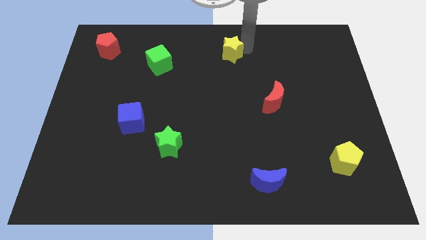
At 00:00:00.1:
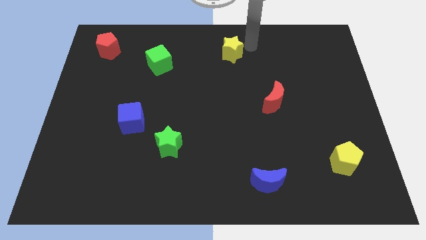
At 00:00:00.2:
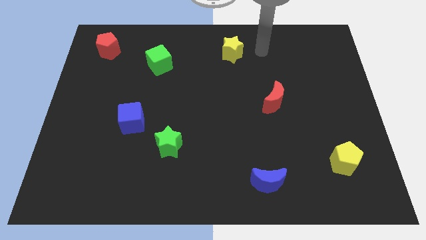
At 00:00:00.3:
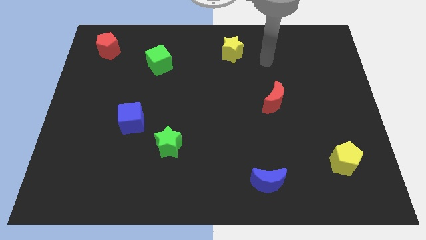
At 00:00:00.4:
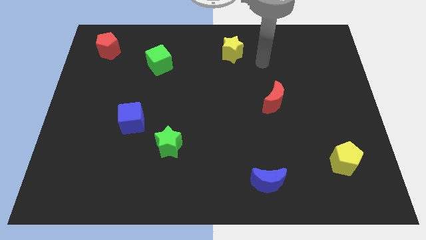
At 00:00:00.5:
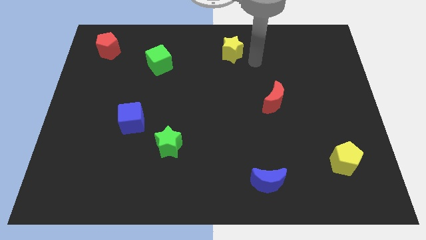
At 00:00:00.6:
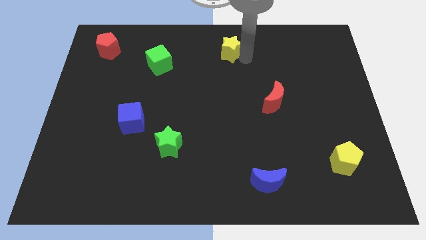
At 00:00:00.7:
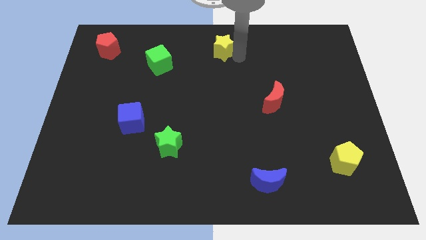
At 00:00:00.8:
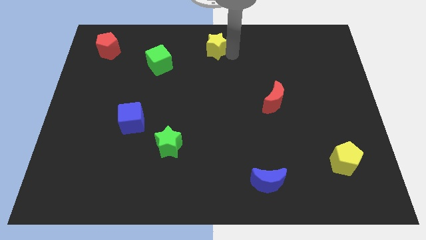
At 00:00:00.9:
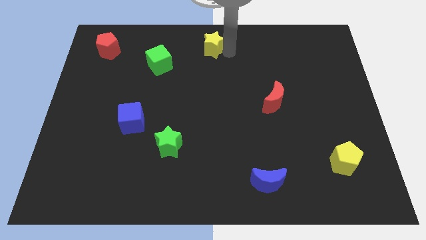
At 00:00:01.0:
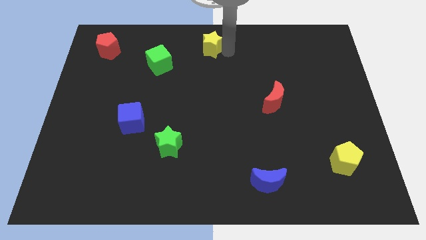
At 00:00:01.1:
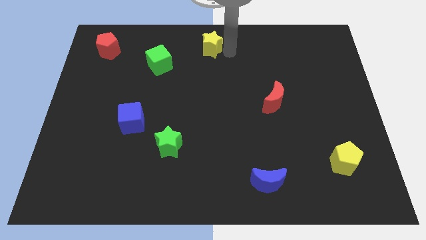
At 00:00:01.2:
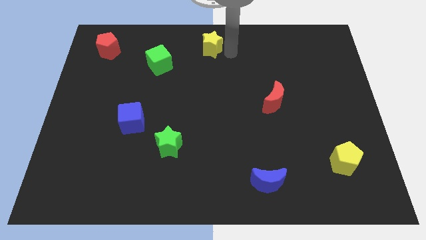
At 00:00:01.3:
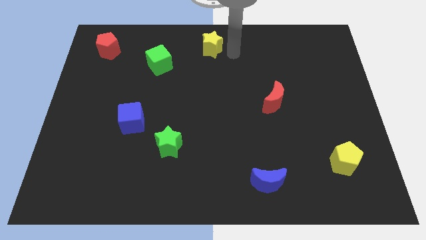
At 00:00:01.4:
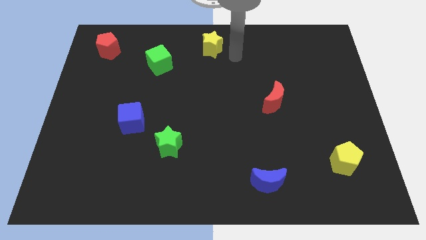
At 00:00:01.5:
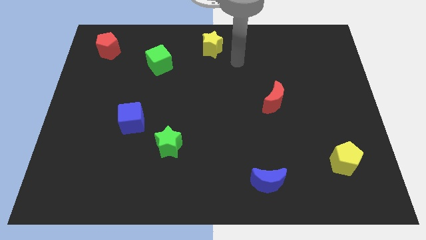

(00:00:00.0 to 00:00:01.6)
push the yellow star slightly to the left

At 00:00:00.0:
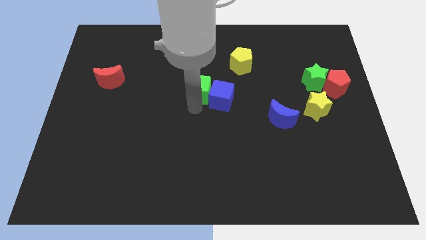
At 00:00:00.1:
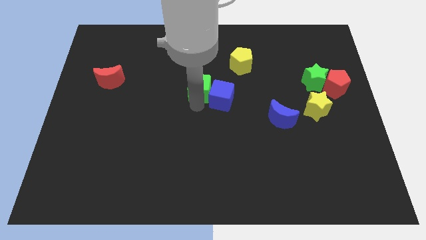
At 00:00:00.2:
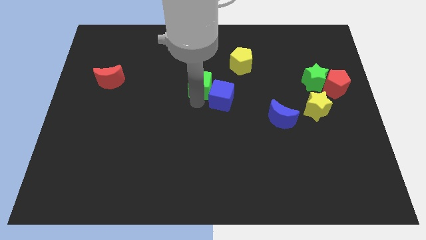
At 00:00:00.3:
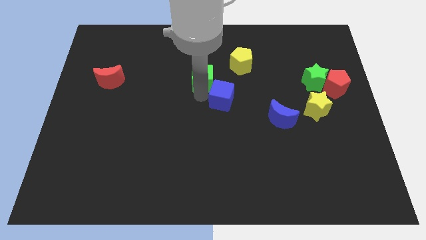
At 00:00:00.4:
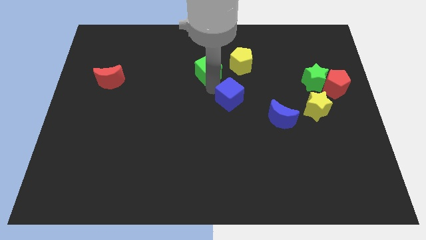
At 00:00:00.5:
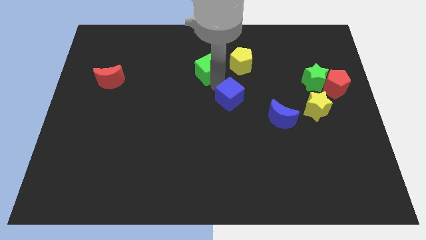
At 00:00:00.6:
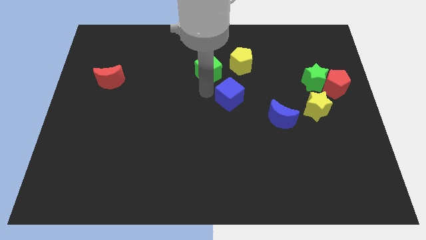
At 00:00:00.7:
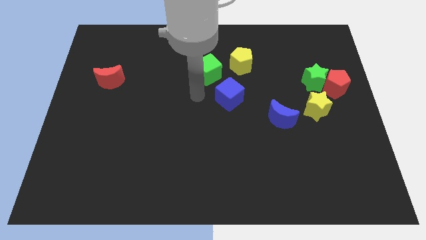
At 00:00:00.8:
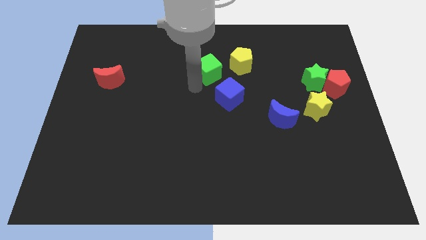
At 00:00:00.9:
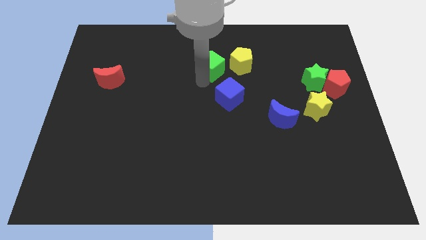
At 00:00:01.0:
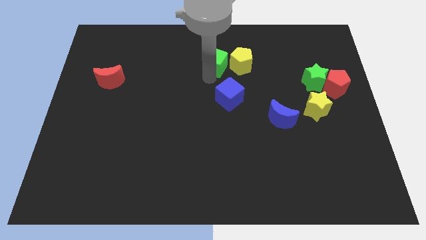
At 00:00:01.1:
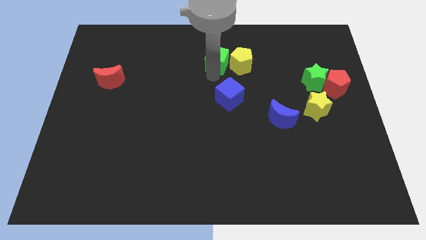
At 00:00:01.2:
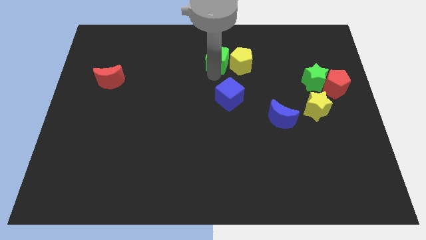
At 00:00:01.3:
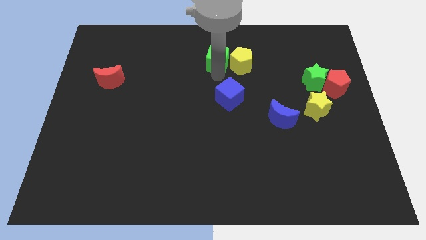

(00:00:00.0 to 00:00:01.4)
put the green cube left to the yellow pentagon

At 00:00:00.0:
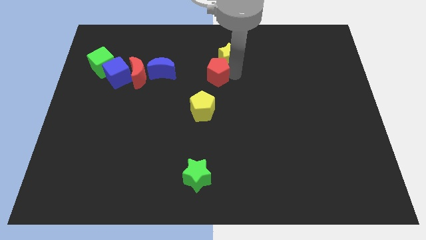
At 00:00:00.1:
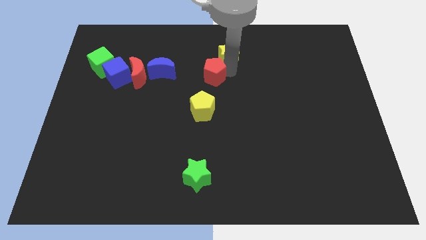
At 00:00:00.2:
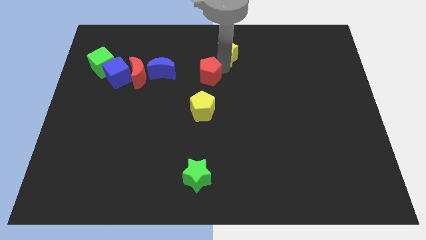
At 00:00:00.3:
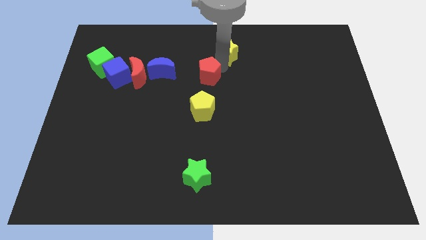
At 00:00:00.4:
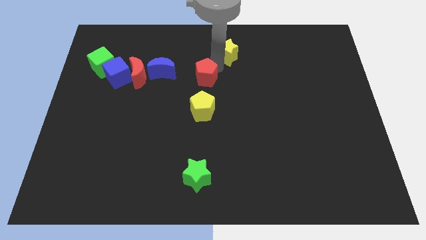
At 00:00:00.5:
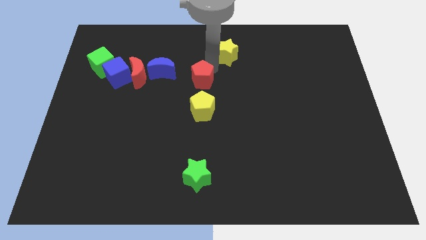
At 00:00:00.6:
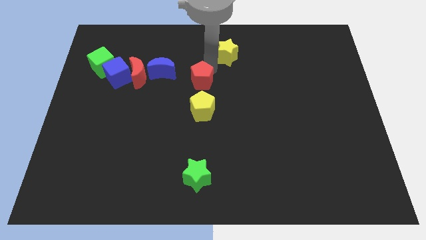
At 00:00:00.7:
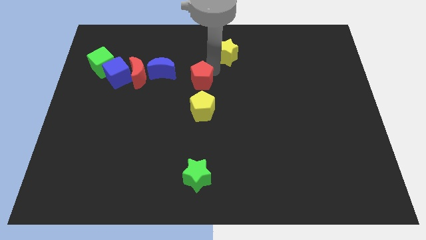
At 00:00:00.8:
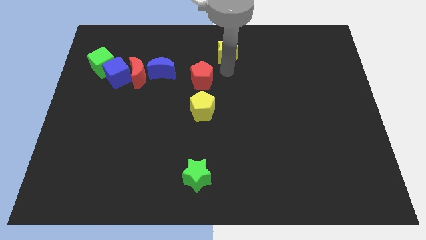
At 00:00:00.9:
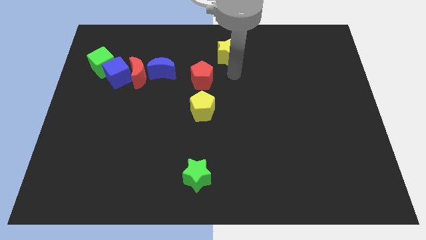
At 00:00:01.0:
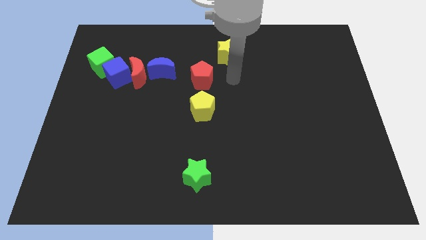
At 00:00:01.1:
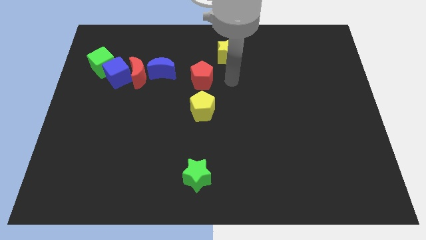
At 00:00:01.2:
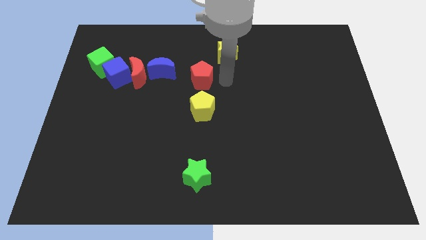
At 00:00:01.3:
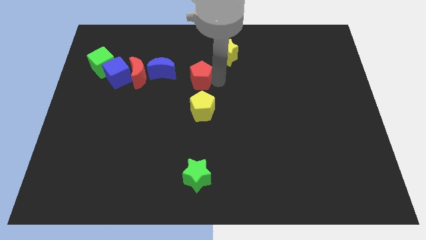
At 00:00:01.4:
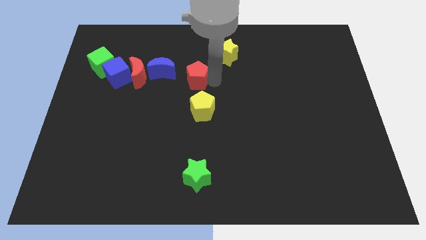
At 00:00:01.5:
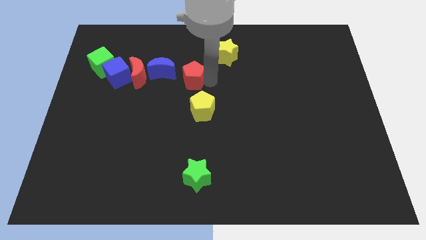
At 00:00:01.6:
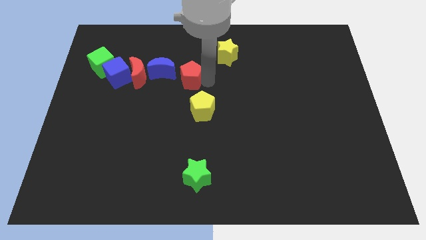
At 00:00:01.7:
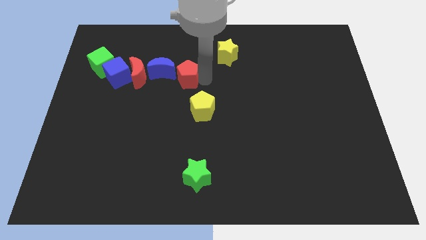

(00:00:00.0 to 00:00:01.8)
move the red pentagon to the right of blue crescent

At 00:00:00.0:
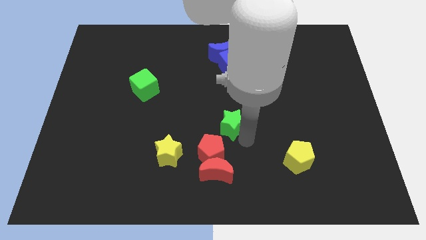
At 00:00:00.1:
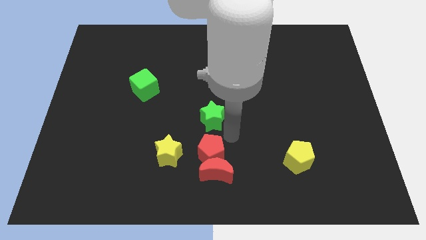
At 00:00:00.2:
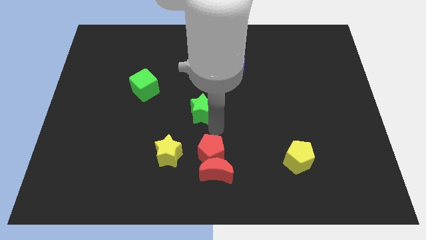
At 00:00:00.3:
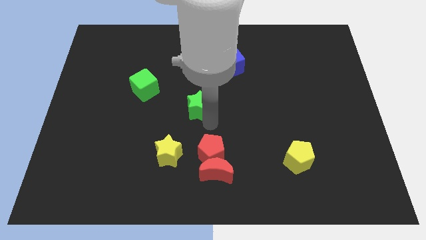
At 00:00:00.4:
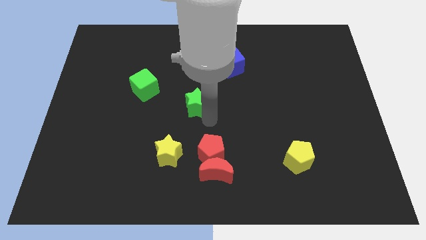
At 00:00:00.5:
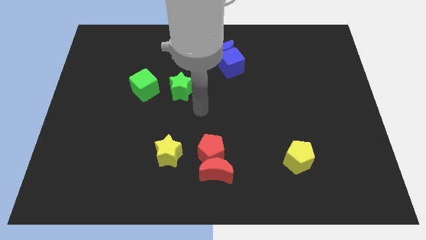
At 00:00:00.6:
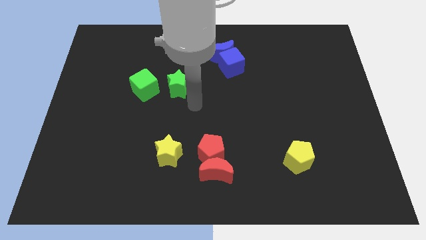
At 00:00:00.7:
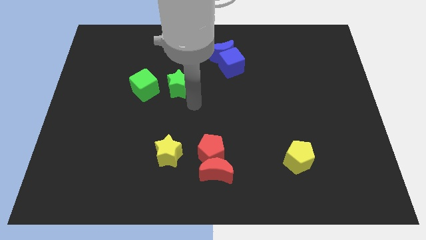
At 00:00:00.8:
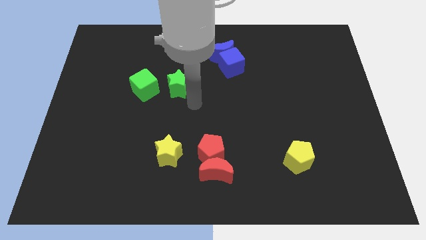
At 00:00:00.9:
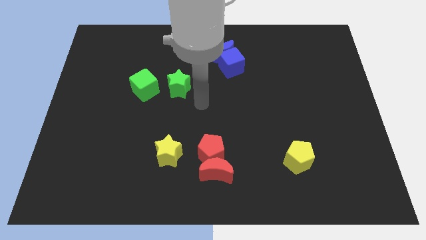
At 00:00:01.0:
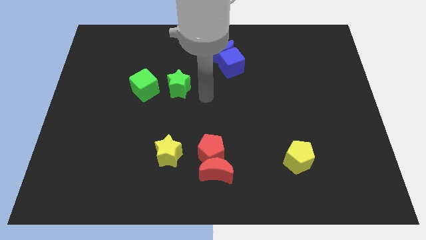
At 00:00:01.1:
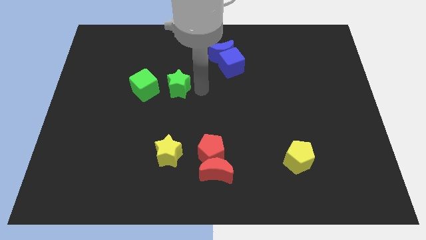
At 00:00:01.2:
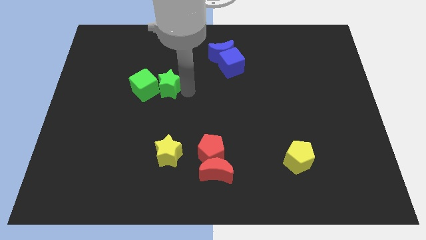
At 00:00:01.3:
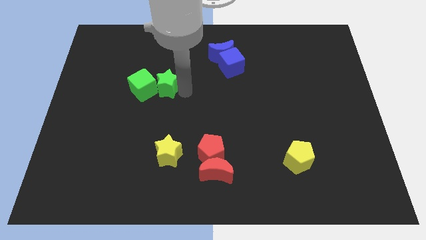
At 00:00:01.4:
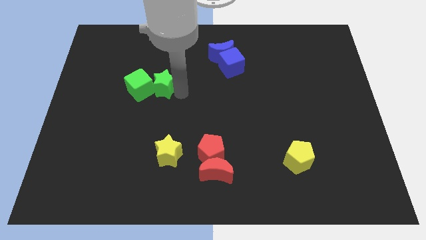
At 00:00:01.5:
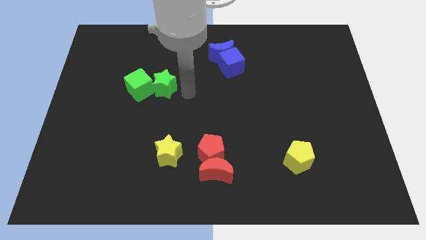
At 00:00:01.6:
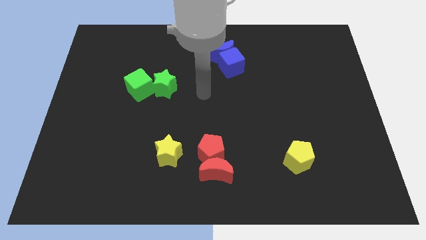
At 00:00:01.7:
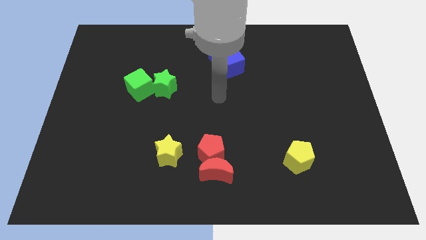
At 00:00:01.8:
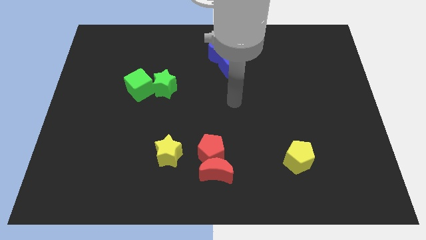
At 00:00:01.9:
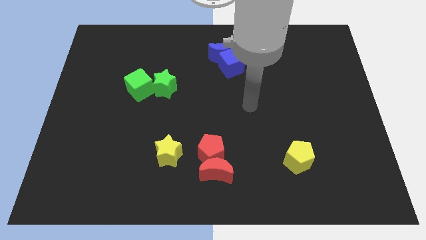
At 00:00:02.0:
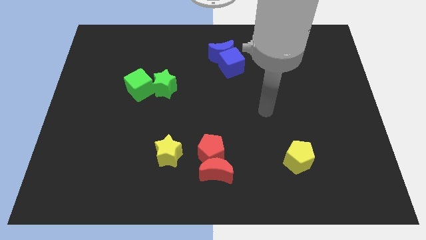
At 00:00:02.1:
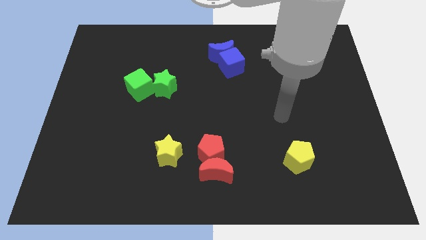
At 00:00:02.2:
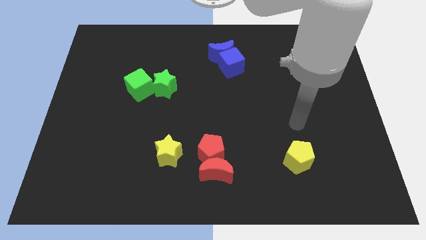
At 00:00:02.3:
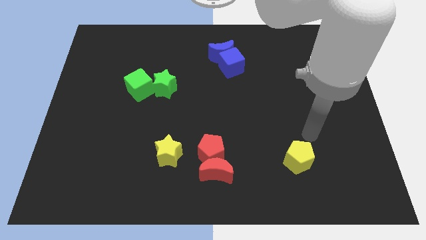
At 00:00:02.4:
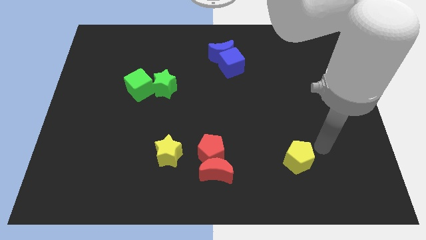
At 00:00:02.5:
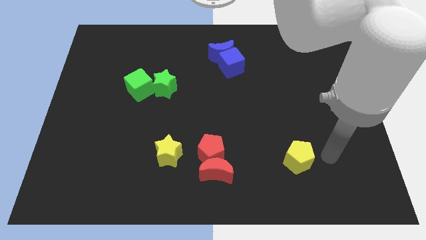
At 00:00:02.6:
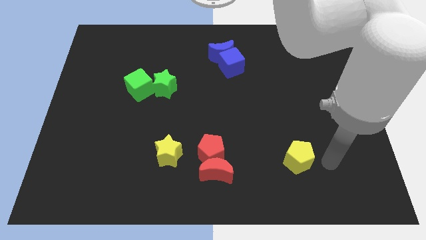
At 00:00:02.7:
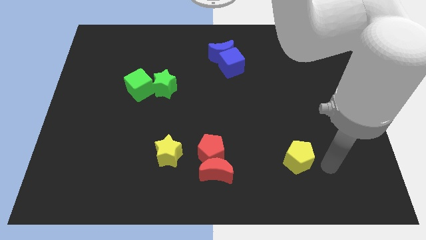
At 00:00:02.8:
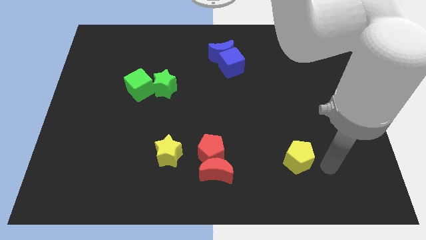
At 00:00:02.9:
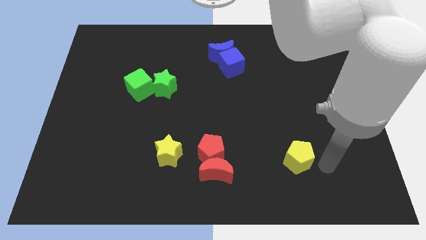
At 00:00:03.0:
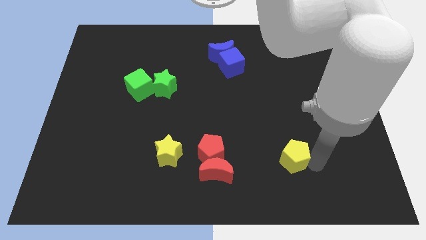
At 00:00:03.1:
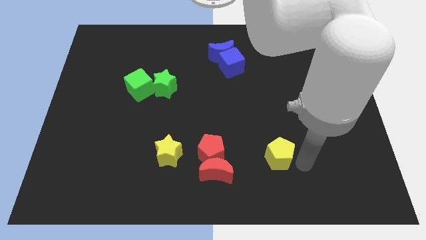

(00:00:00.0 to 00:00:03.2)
push the green star into the green cube

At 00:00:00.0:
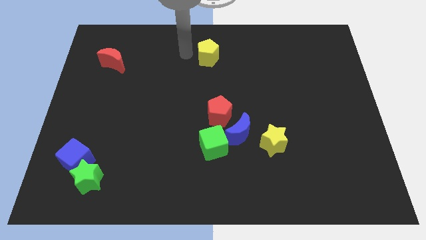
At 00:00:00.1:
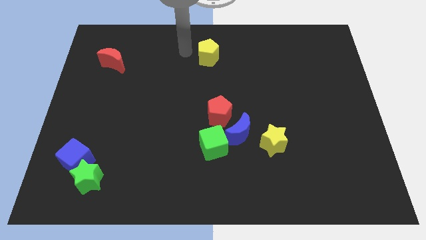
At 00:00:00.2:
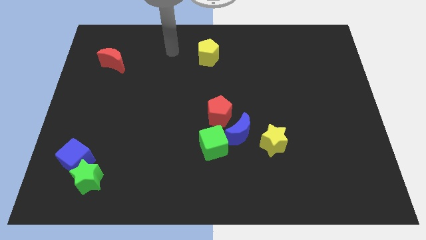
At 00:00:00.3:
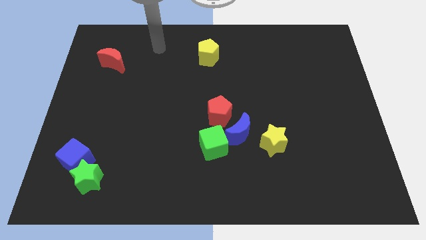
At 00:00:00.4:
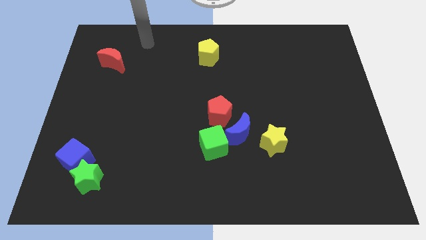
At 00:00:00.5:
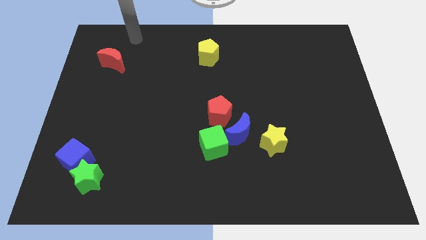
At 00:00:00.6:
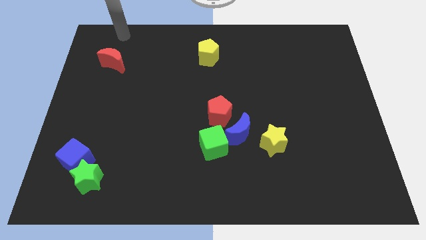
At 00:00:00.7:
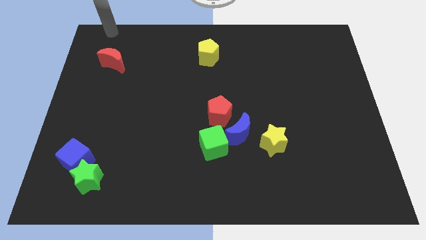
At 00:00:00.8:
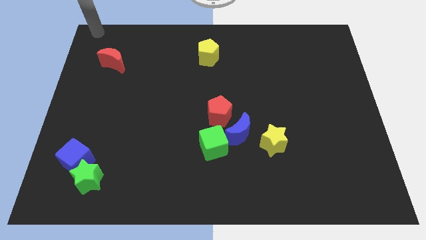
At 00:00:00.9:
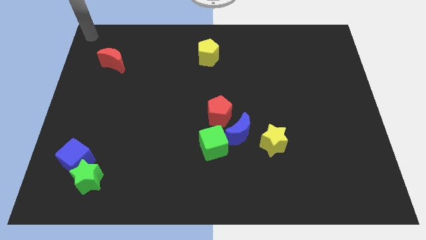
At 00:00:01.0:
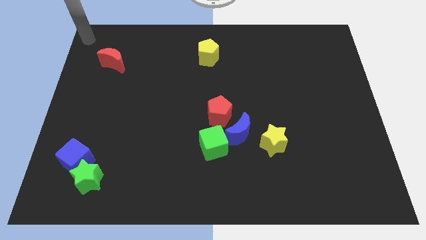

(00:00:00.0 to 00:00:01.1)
place your arm at the top left corner of the board
